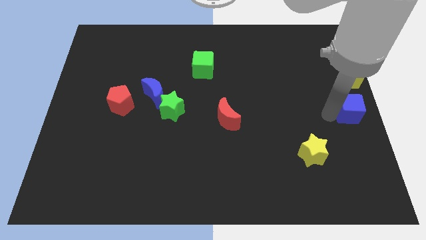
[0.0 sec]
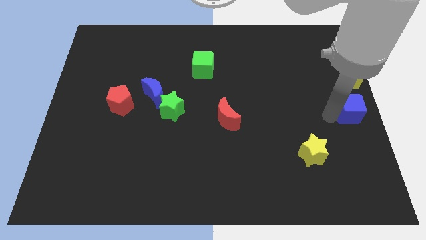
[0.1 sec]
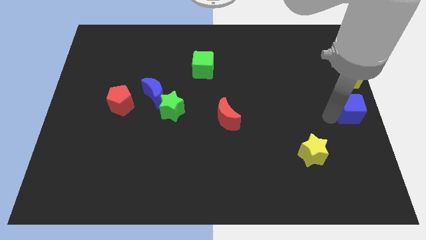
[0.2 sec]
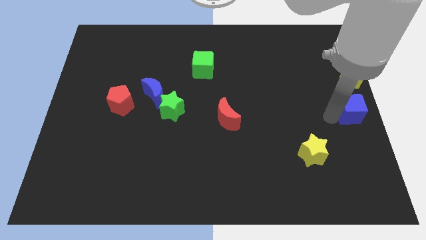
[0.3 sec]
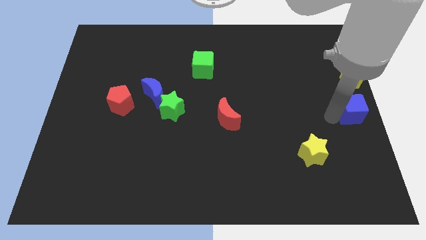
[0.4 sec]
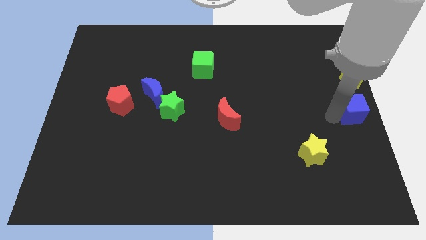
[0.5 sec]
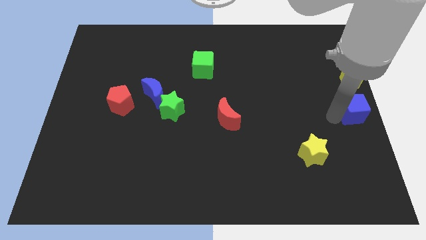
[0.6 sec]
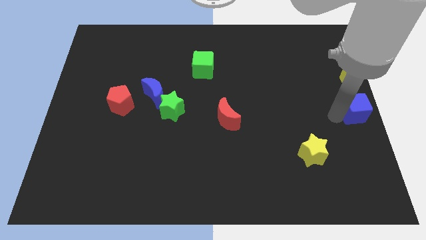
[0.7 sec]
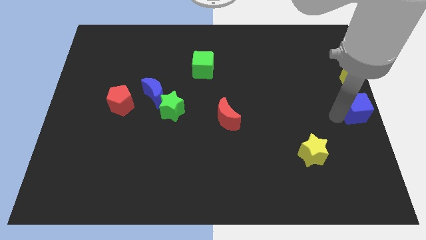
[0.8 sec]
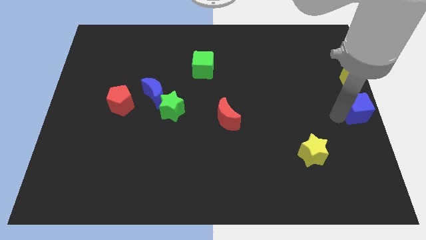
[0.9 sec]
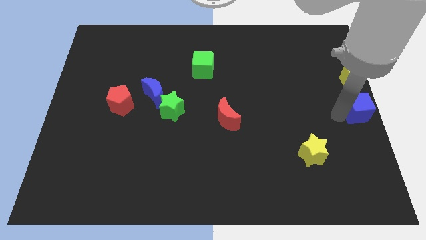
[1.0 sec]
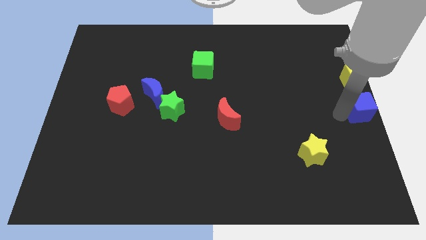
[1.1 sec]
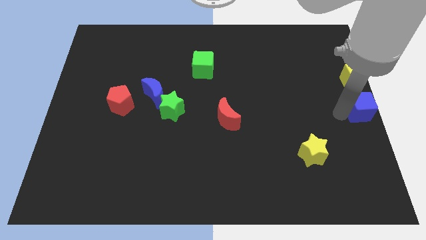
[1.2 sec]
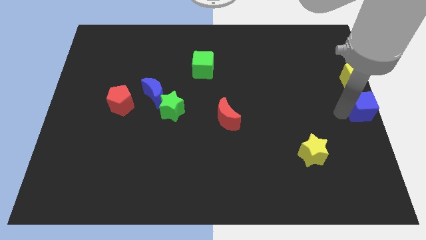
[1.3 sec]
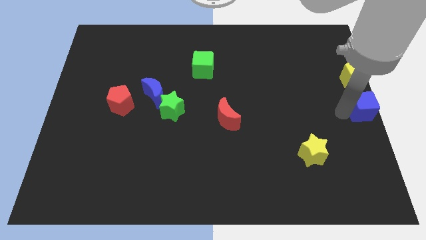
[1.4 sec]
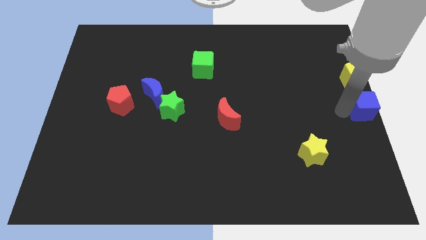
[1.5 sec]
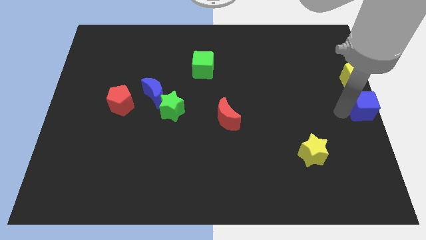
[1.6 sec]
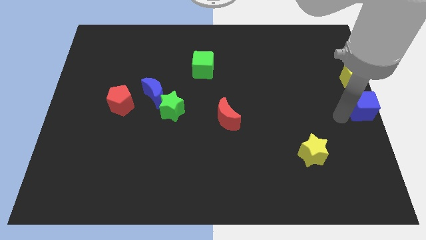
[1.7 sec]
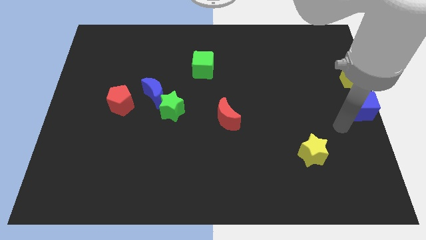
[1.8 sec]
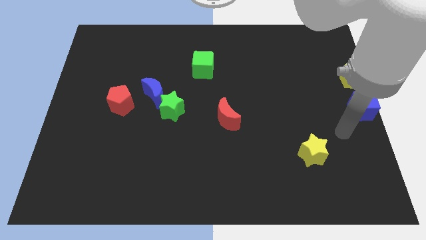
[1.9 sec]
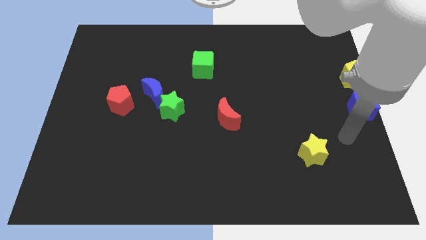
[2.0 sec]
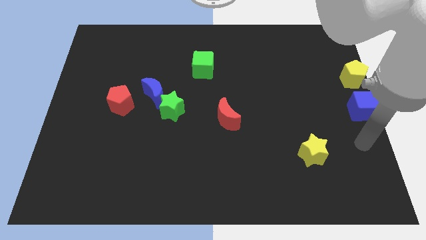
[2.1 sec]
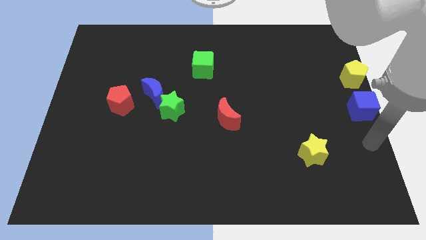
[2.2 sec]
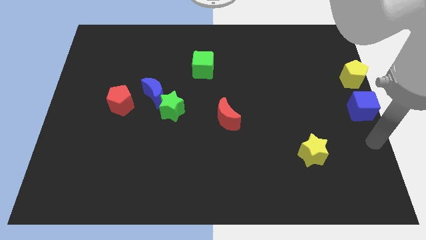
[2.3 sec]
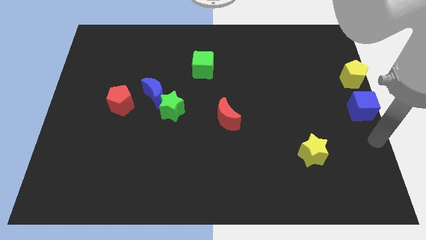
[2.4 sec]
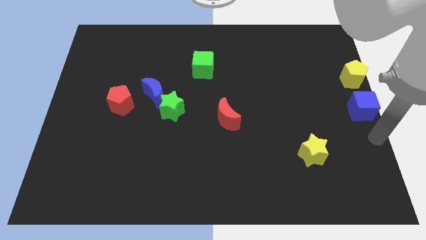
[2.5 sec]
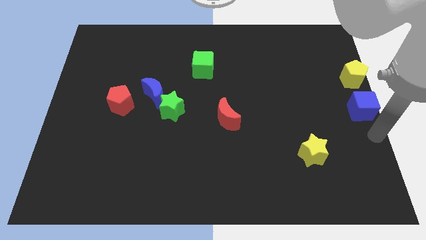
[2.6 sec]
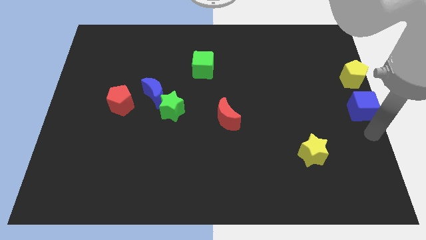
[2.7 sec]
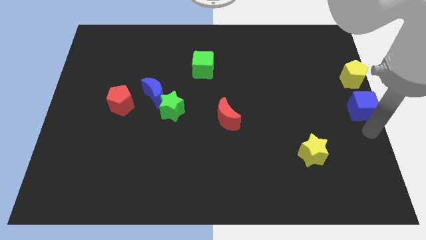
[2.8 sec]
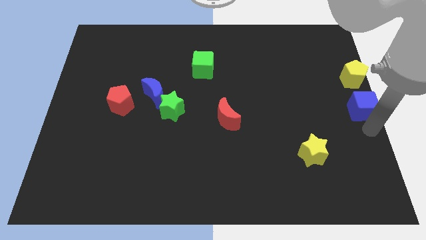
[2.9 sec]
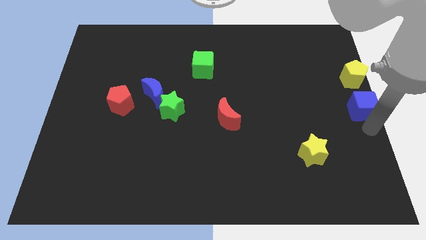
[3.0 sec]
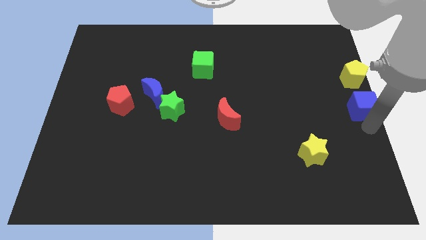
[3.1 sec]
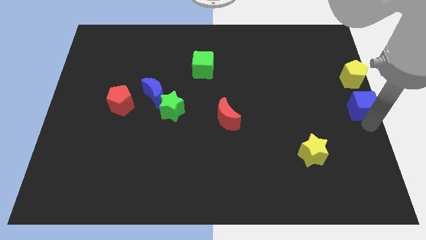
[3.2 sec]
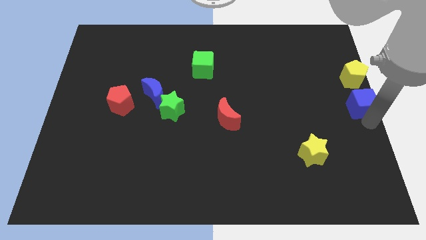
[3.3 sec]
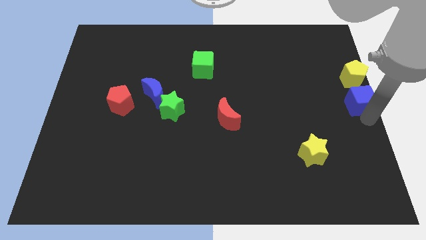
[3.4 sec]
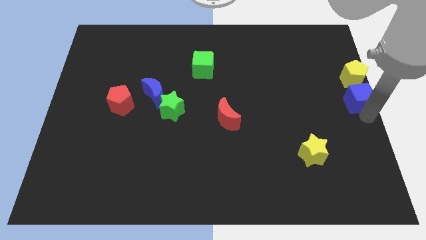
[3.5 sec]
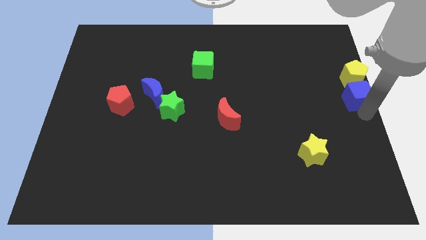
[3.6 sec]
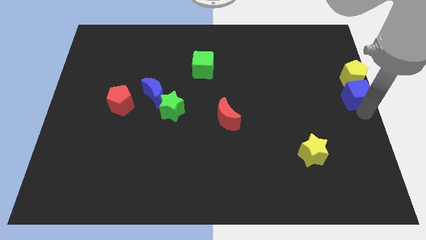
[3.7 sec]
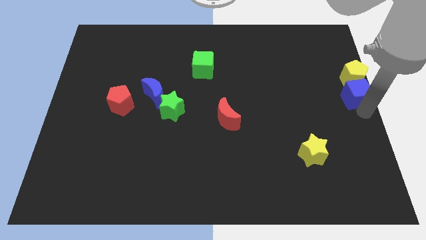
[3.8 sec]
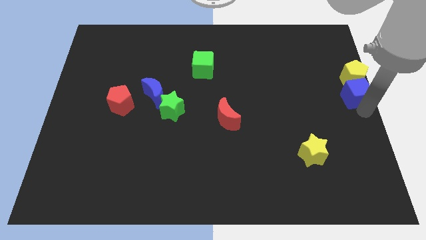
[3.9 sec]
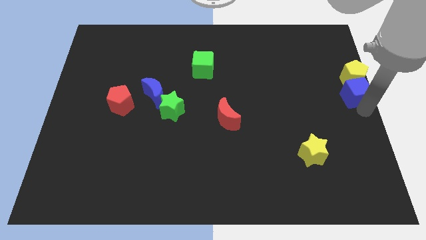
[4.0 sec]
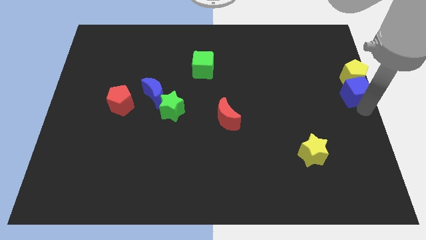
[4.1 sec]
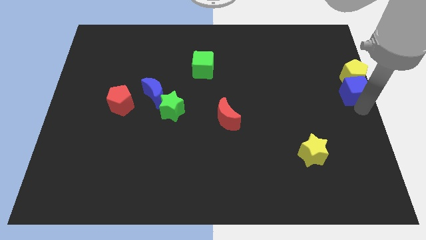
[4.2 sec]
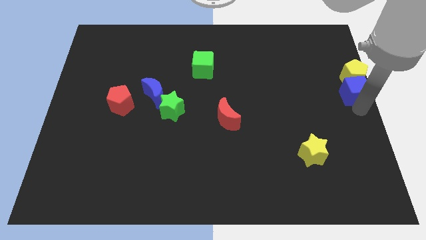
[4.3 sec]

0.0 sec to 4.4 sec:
place the blue cube below the yellow pentagon

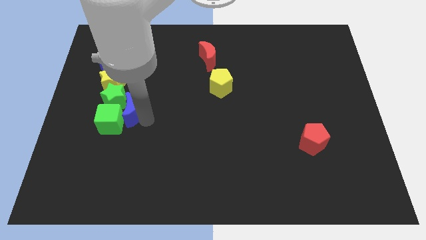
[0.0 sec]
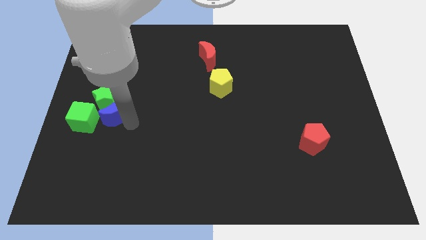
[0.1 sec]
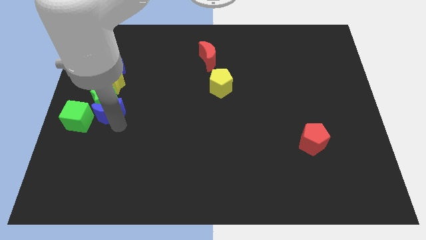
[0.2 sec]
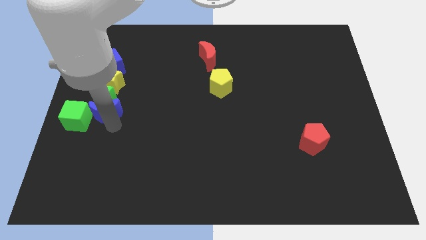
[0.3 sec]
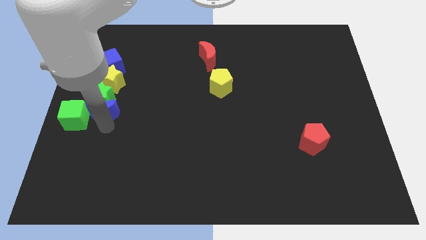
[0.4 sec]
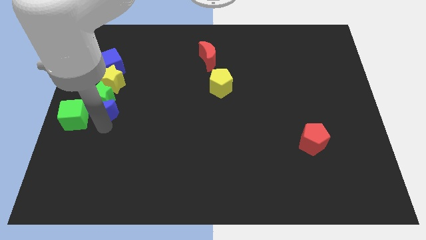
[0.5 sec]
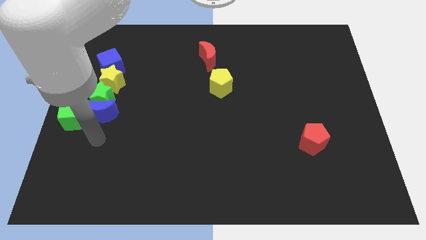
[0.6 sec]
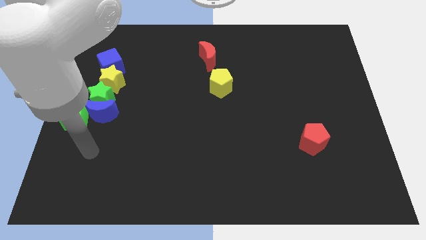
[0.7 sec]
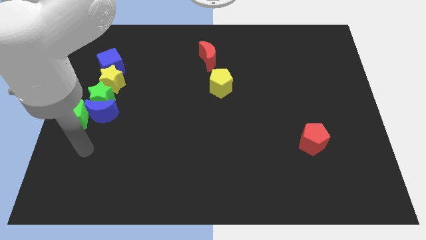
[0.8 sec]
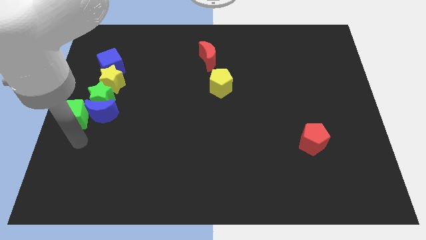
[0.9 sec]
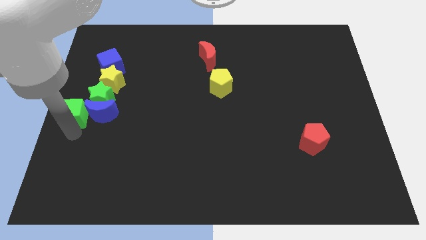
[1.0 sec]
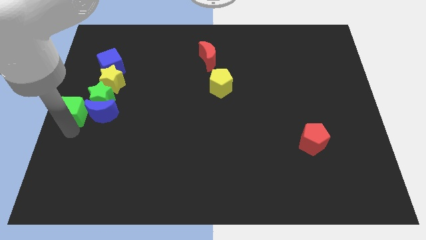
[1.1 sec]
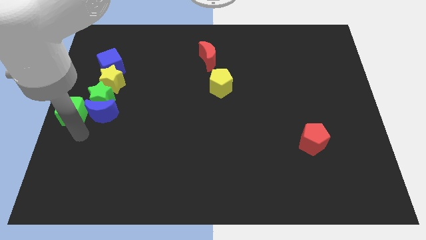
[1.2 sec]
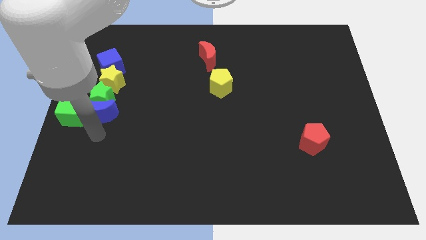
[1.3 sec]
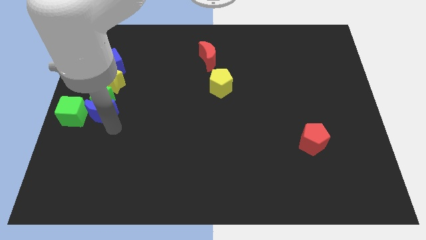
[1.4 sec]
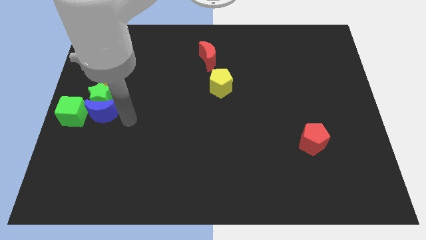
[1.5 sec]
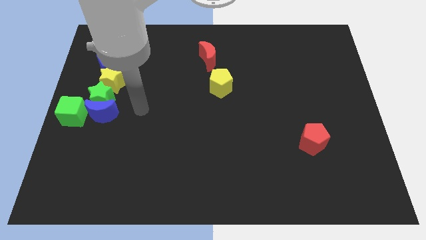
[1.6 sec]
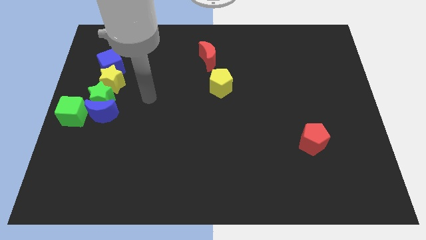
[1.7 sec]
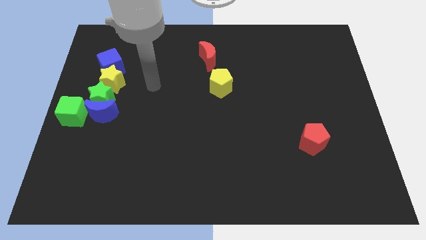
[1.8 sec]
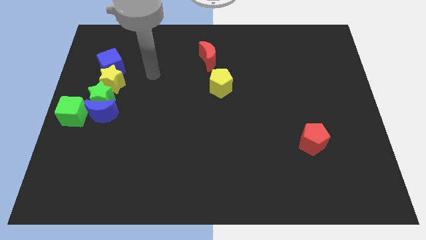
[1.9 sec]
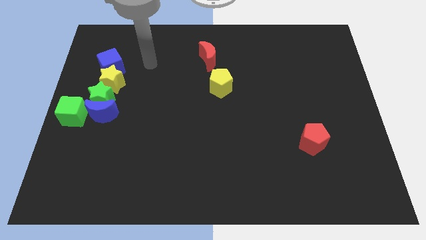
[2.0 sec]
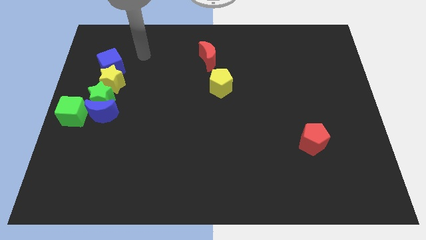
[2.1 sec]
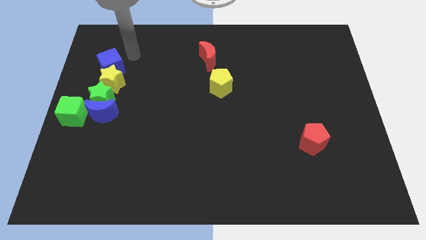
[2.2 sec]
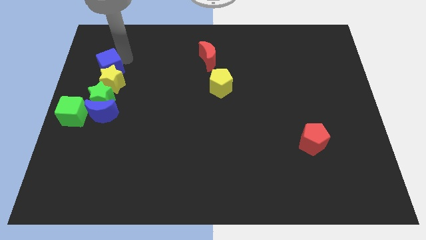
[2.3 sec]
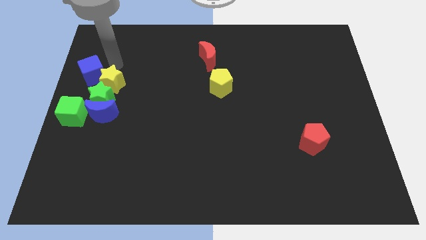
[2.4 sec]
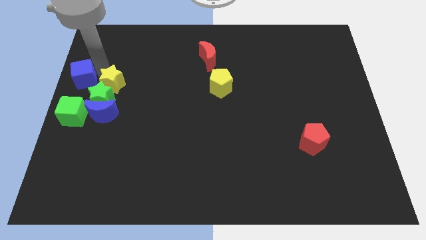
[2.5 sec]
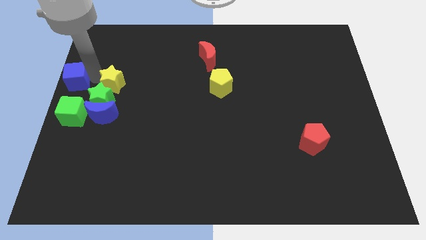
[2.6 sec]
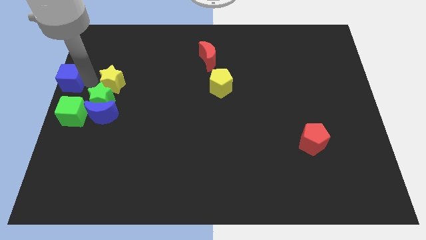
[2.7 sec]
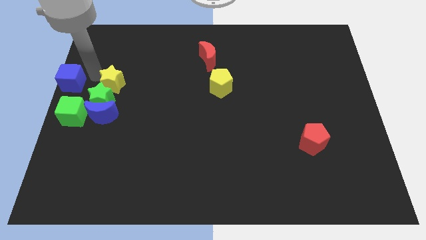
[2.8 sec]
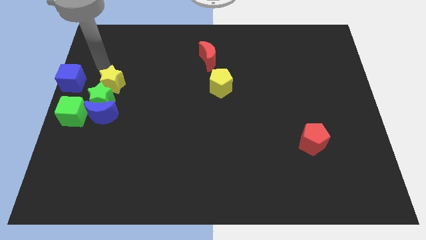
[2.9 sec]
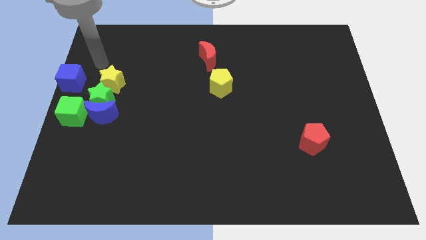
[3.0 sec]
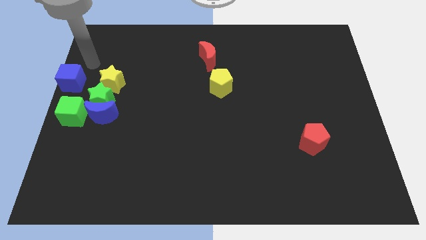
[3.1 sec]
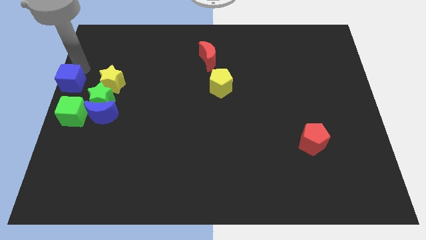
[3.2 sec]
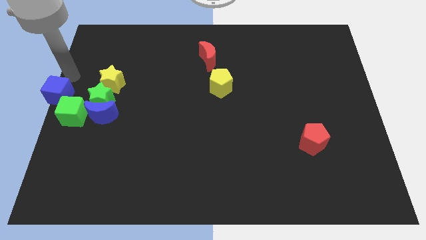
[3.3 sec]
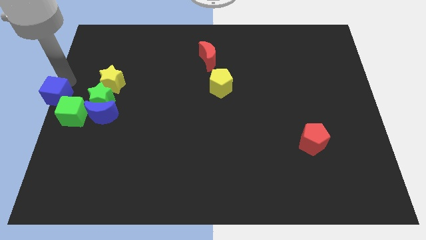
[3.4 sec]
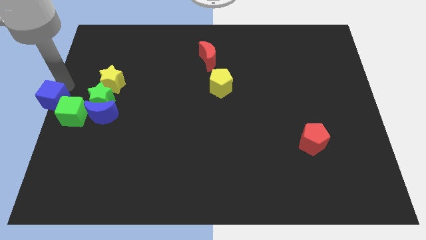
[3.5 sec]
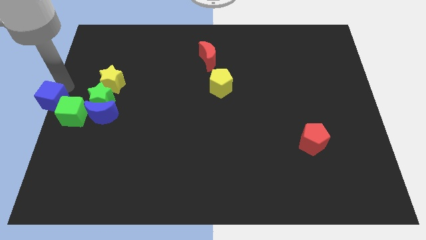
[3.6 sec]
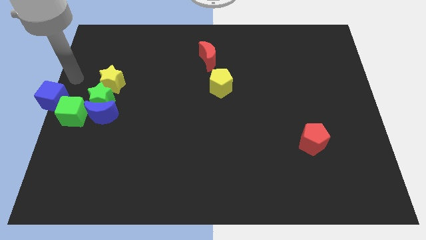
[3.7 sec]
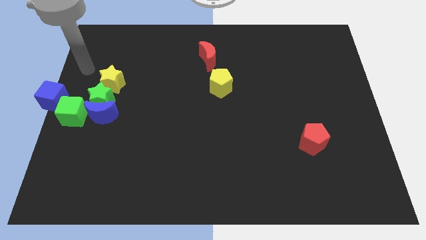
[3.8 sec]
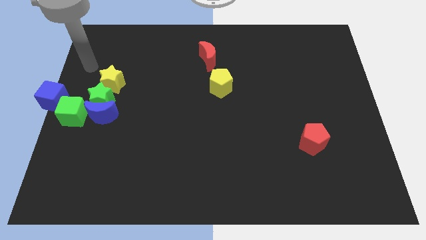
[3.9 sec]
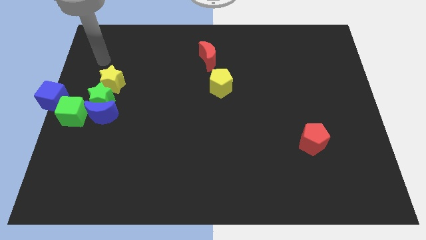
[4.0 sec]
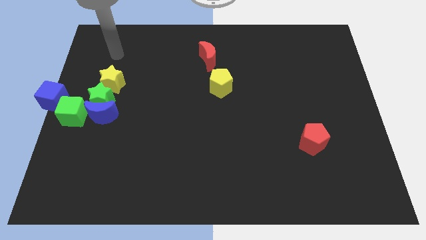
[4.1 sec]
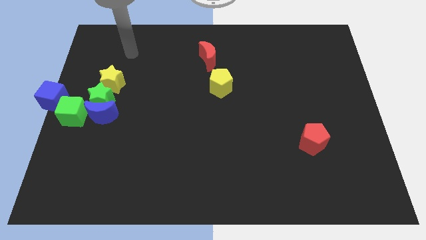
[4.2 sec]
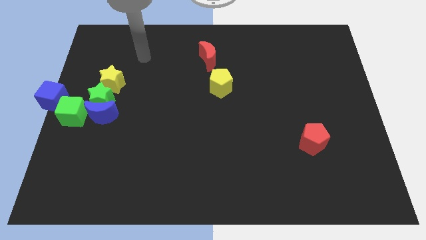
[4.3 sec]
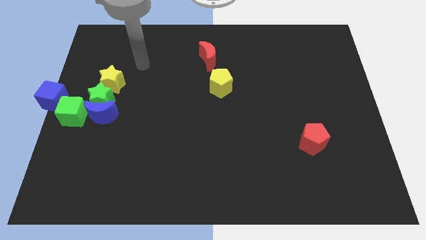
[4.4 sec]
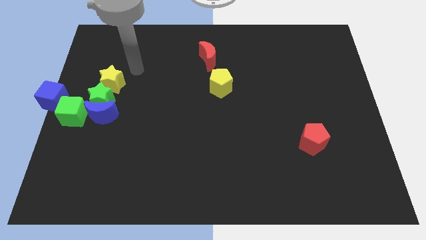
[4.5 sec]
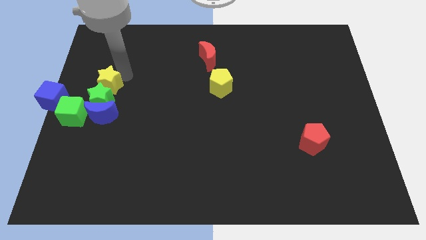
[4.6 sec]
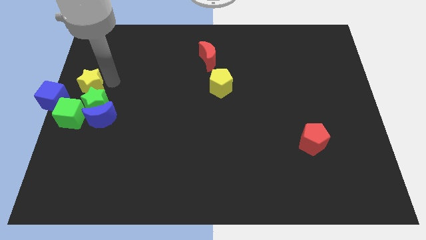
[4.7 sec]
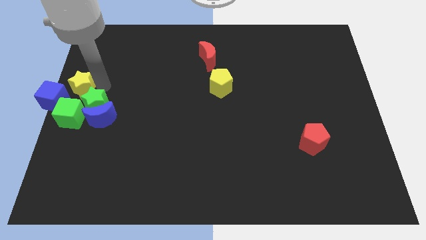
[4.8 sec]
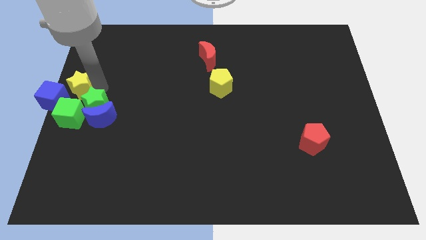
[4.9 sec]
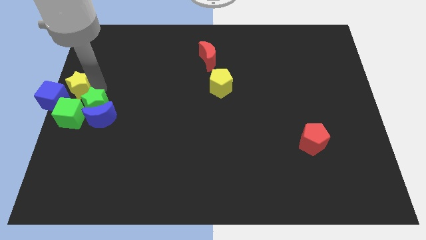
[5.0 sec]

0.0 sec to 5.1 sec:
group up the green cube blue crescent blue cube and yellow star at the center left of the board
